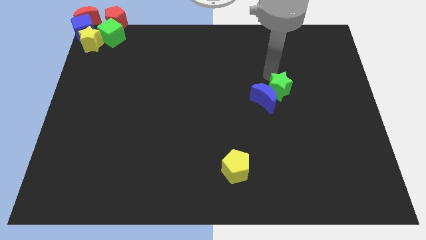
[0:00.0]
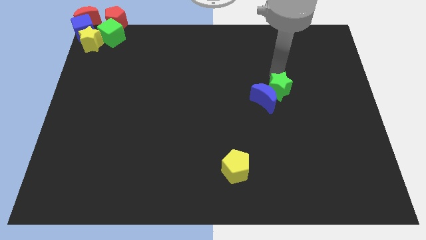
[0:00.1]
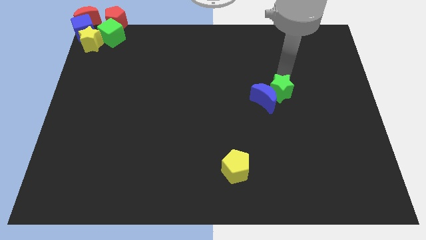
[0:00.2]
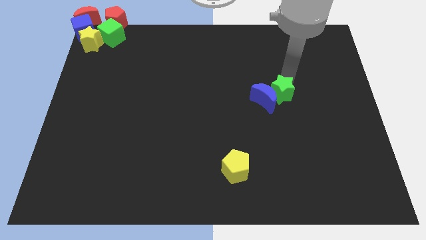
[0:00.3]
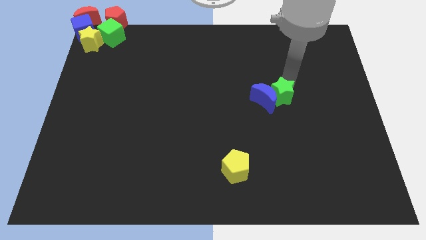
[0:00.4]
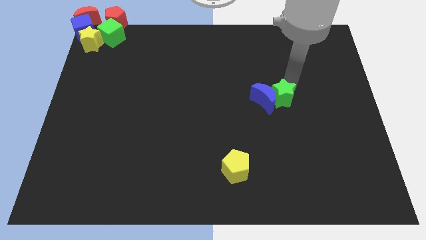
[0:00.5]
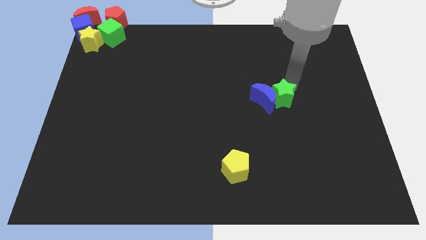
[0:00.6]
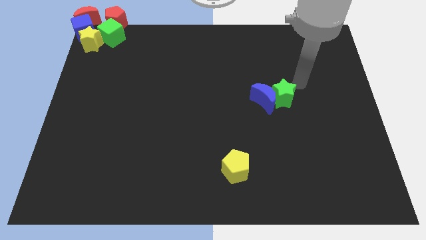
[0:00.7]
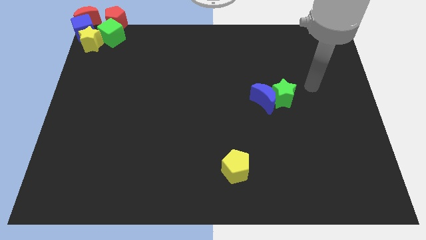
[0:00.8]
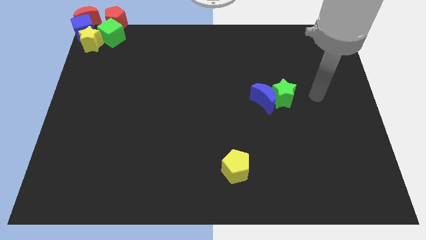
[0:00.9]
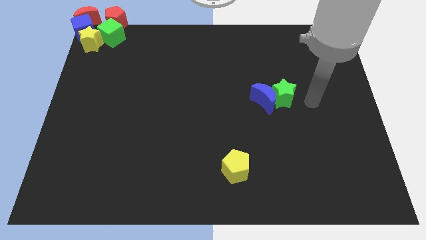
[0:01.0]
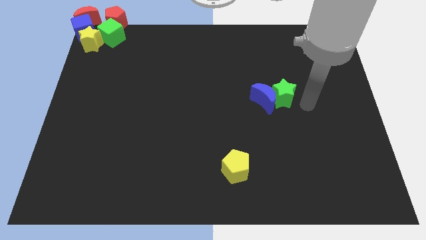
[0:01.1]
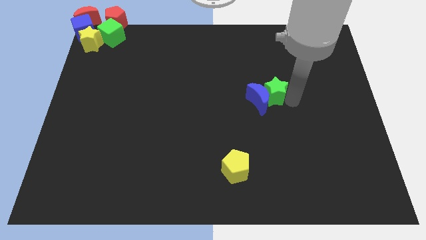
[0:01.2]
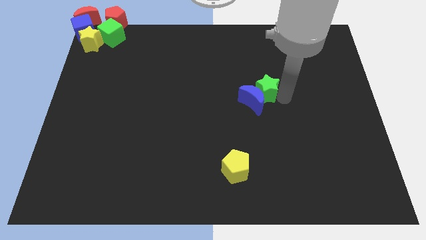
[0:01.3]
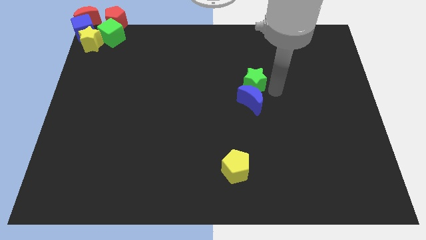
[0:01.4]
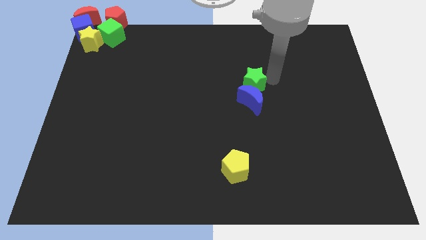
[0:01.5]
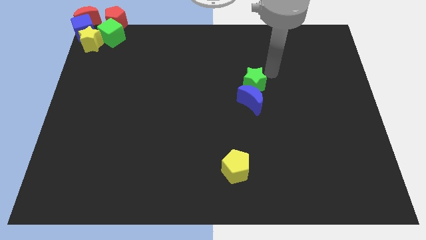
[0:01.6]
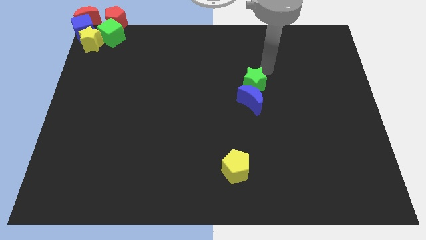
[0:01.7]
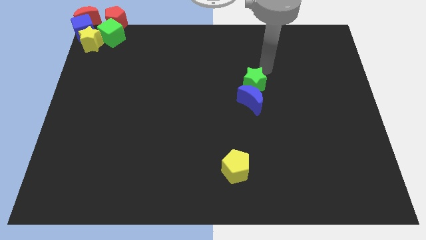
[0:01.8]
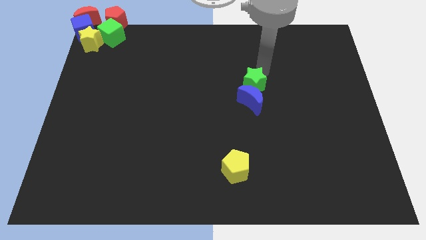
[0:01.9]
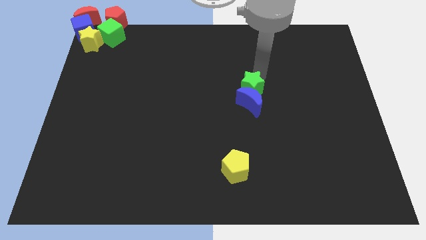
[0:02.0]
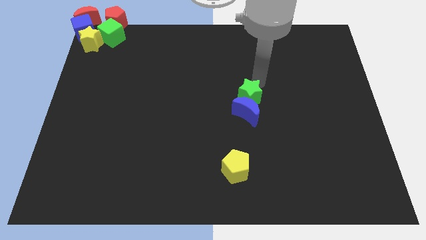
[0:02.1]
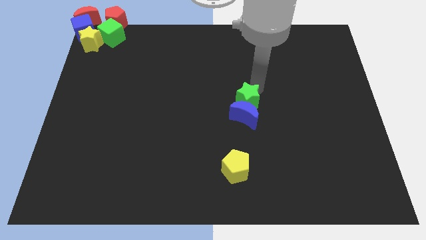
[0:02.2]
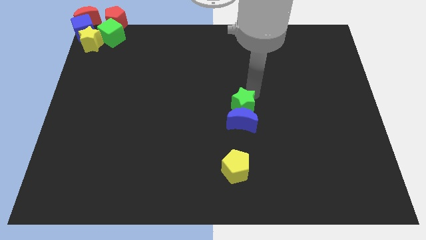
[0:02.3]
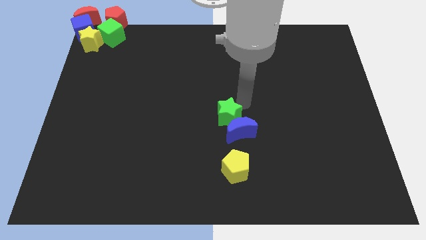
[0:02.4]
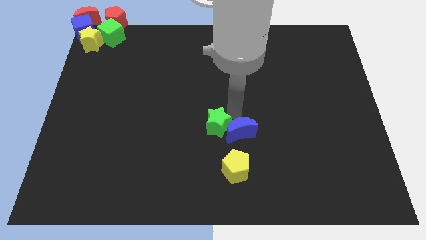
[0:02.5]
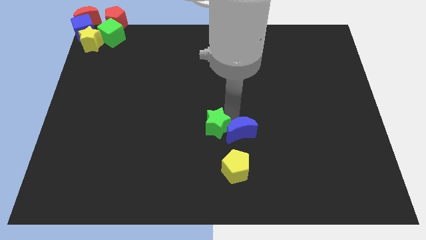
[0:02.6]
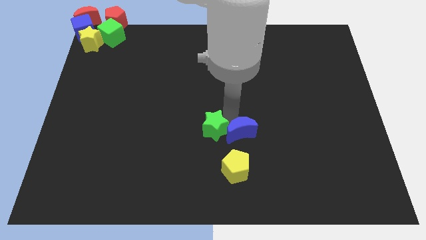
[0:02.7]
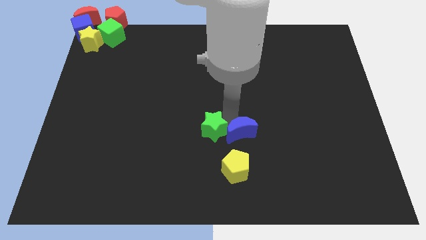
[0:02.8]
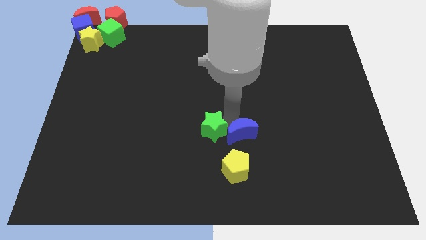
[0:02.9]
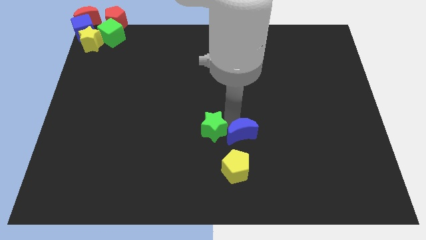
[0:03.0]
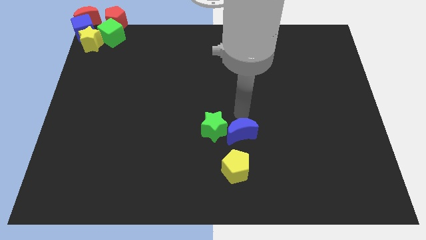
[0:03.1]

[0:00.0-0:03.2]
push the blue moon and green star towards the top of the yellow pentagon

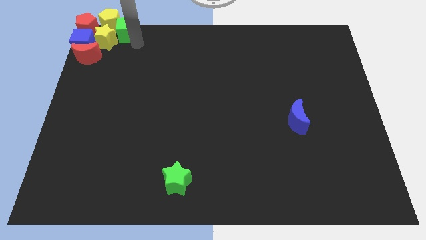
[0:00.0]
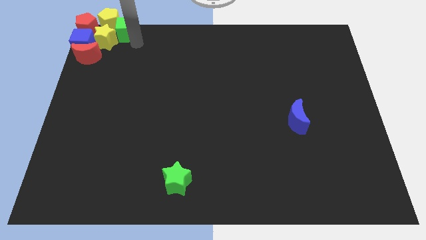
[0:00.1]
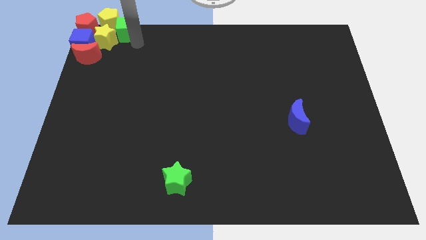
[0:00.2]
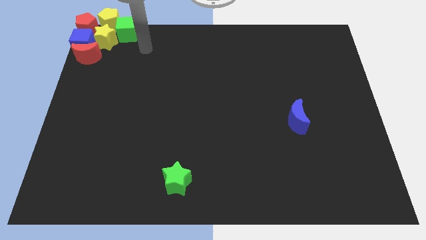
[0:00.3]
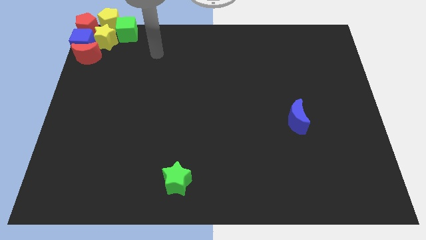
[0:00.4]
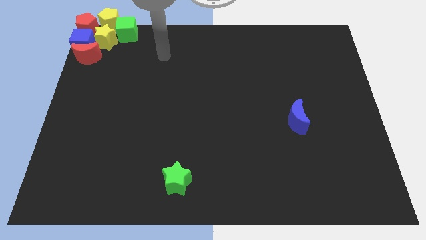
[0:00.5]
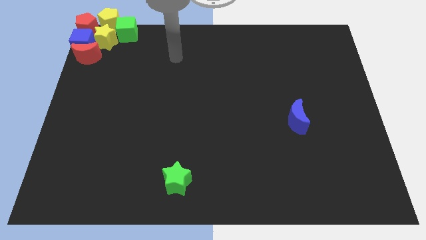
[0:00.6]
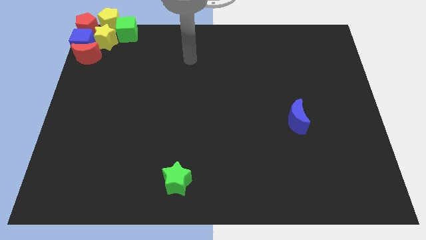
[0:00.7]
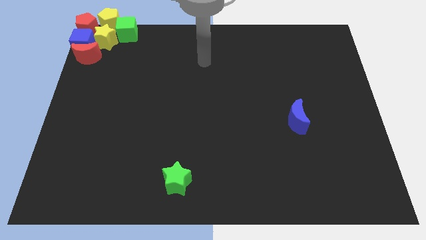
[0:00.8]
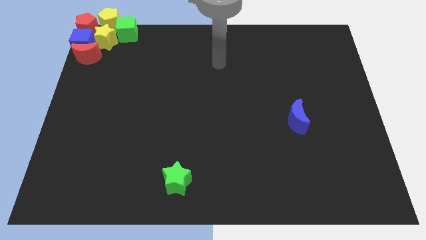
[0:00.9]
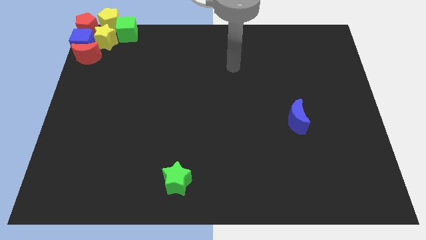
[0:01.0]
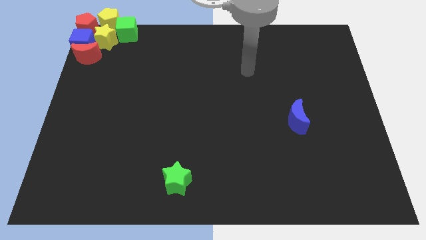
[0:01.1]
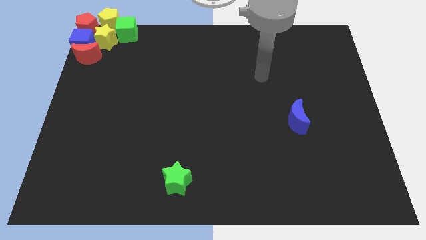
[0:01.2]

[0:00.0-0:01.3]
move the arm away from the green cube

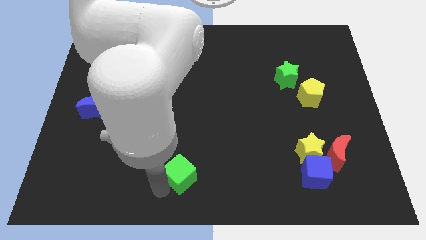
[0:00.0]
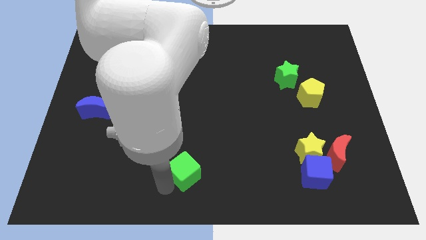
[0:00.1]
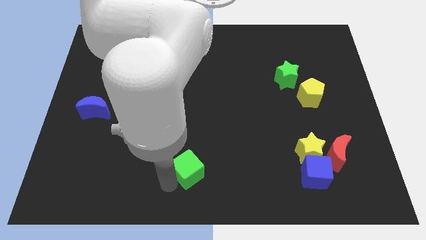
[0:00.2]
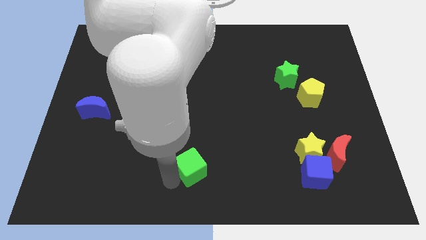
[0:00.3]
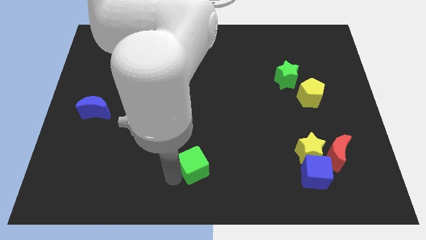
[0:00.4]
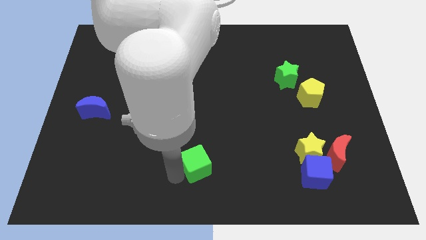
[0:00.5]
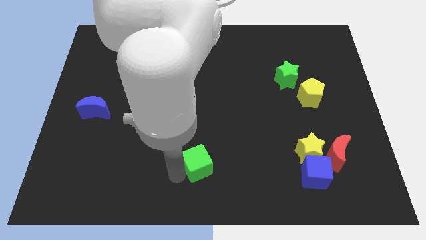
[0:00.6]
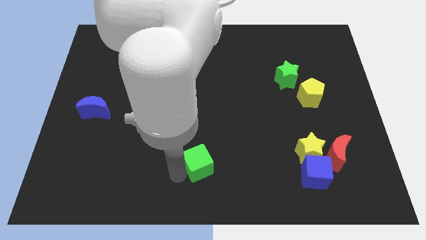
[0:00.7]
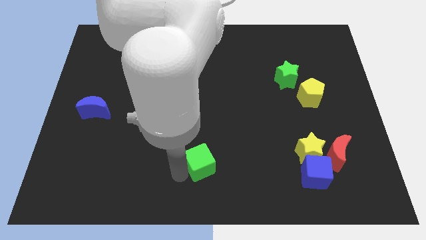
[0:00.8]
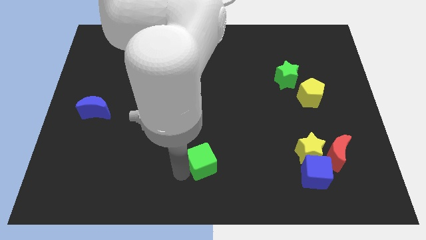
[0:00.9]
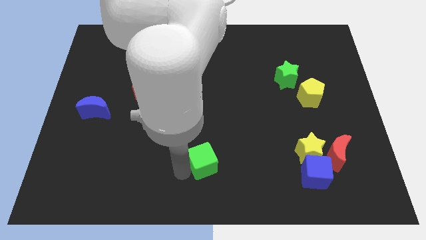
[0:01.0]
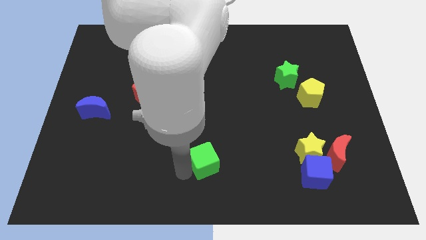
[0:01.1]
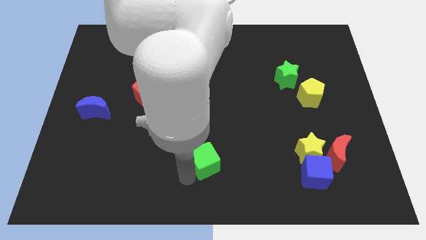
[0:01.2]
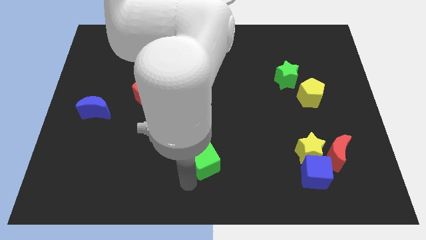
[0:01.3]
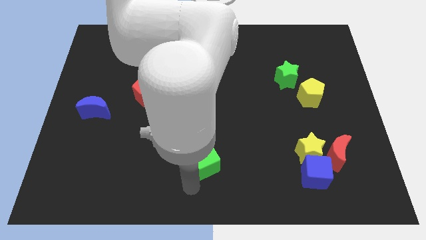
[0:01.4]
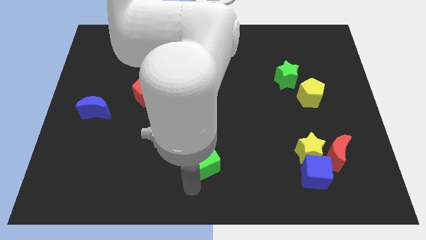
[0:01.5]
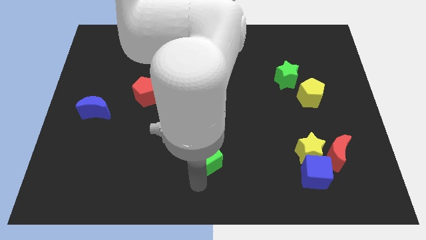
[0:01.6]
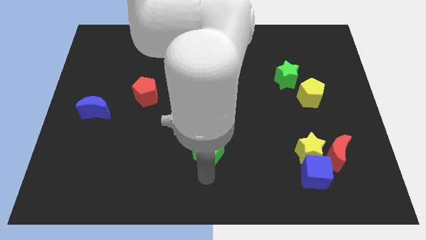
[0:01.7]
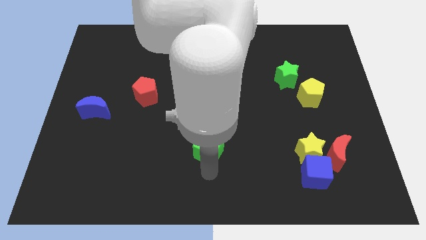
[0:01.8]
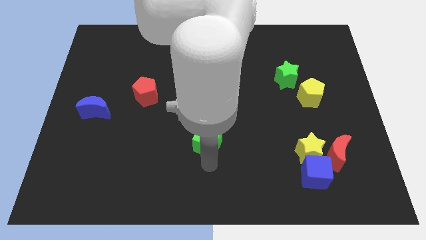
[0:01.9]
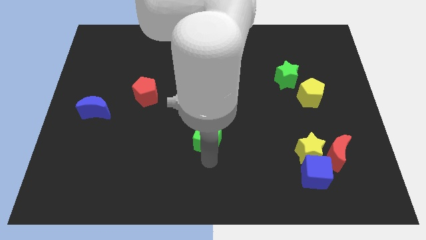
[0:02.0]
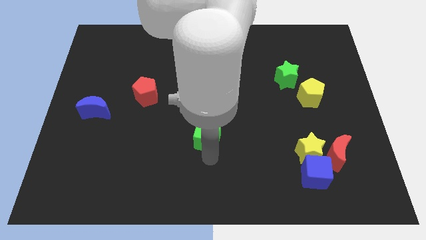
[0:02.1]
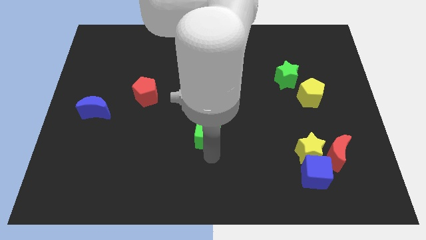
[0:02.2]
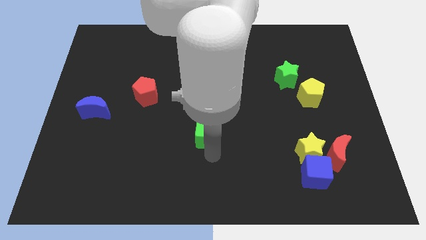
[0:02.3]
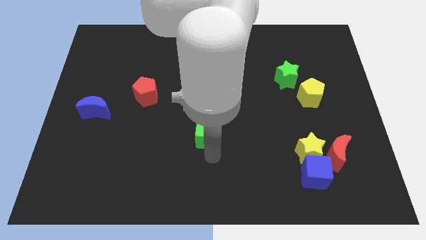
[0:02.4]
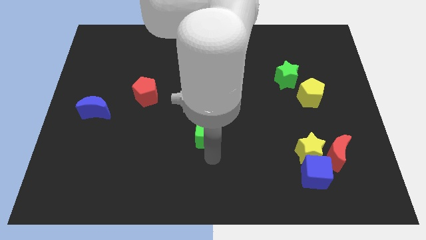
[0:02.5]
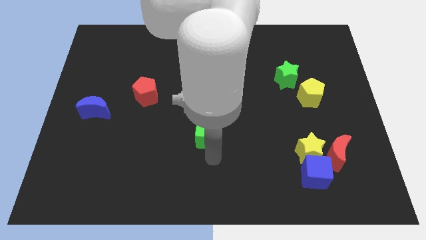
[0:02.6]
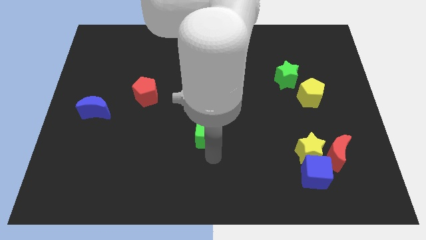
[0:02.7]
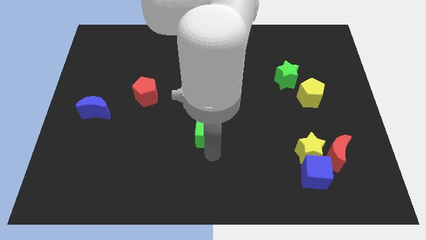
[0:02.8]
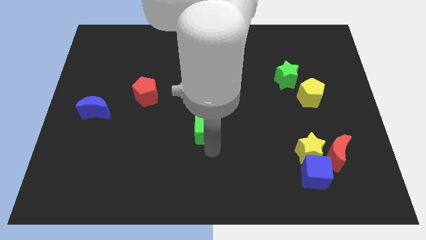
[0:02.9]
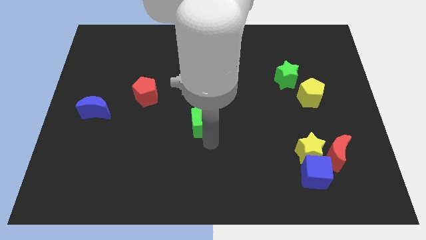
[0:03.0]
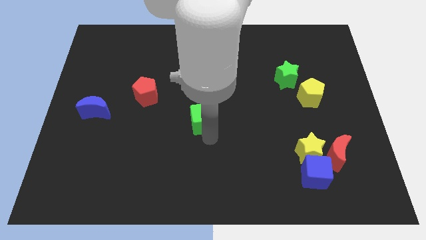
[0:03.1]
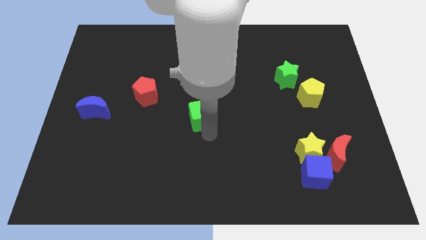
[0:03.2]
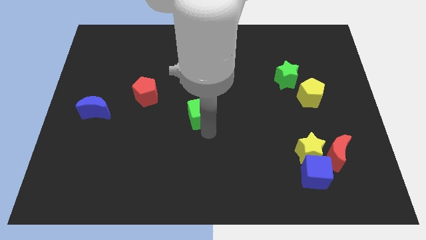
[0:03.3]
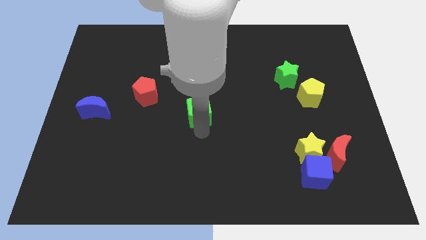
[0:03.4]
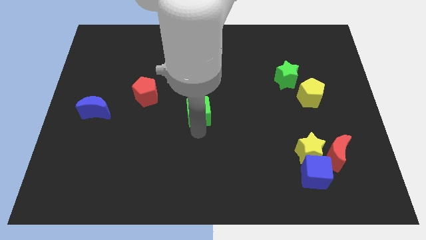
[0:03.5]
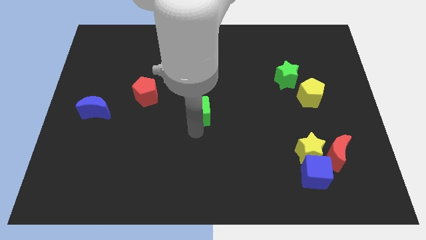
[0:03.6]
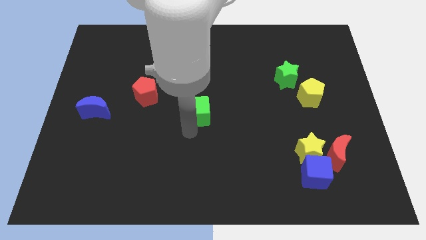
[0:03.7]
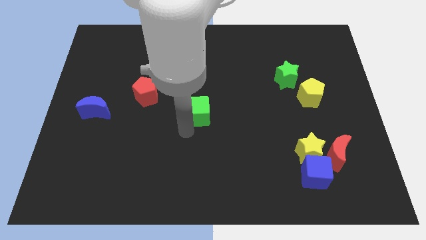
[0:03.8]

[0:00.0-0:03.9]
place the green cube at center of the board

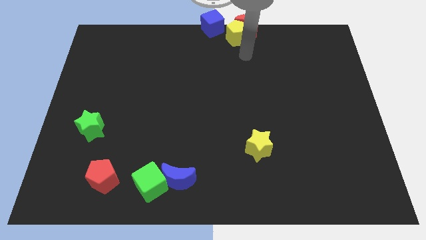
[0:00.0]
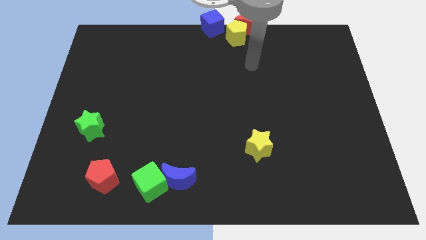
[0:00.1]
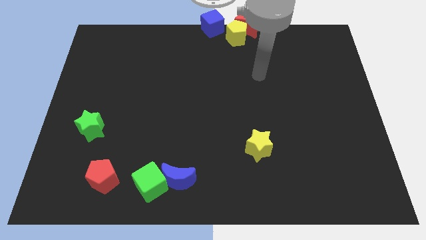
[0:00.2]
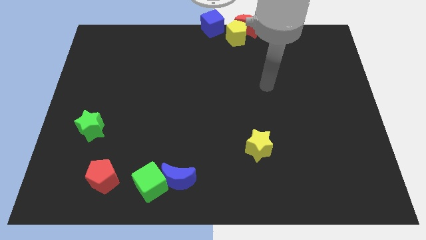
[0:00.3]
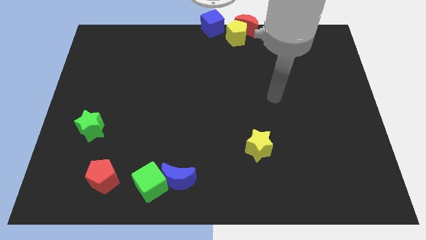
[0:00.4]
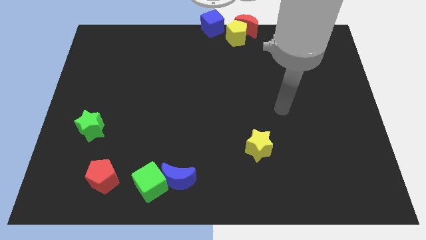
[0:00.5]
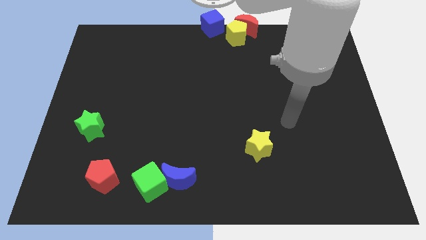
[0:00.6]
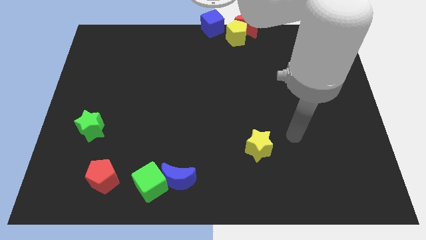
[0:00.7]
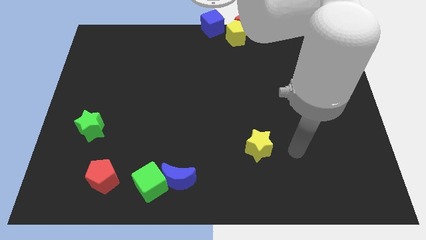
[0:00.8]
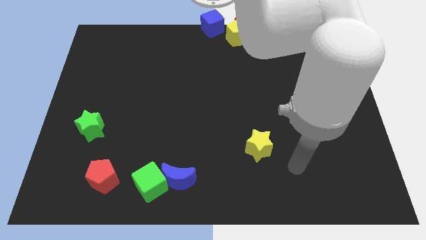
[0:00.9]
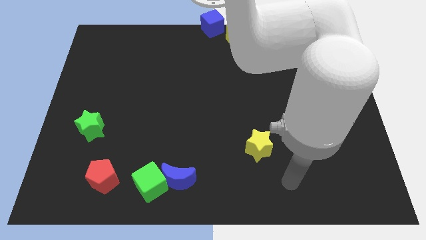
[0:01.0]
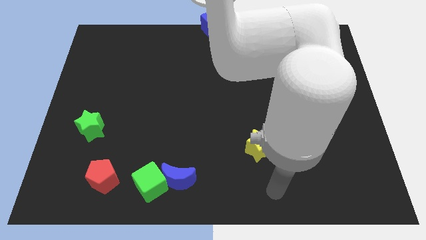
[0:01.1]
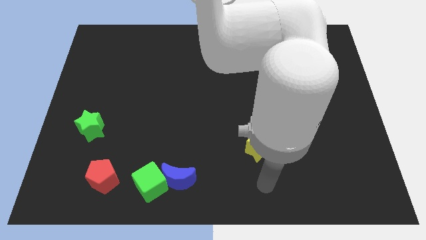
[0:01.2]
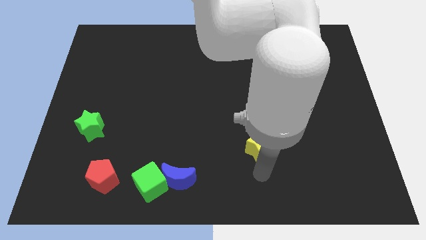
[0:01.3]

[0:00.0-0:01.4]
move your arm towards yellow star
